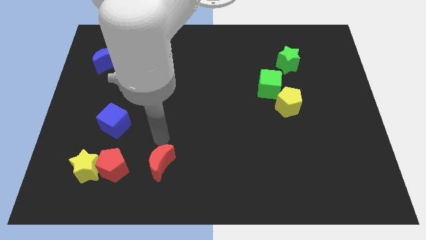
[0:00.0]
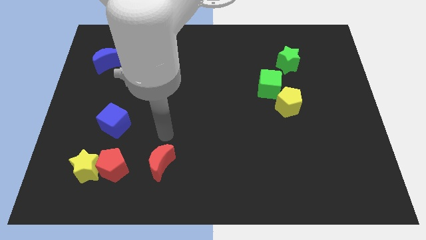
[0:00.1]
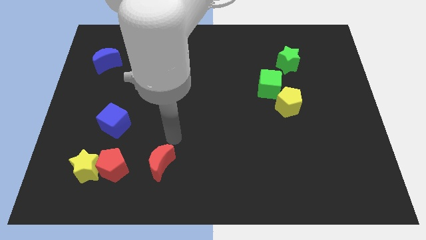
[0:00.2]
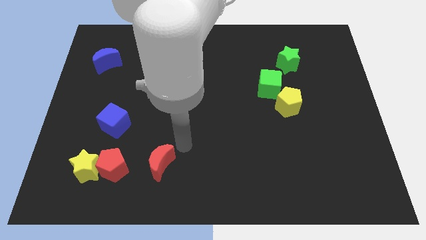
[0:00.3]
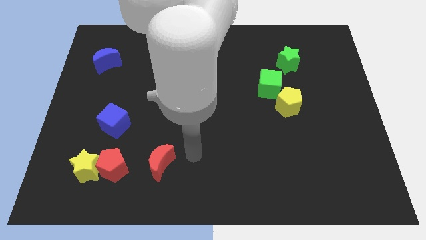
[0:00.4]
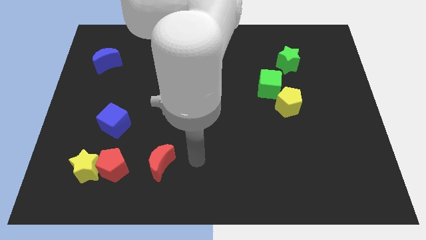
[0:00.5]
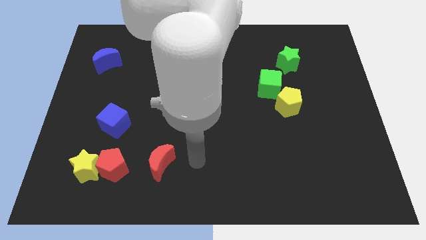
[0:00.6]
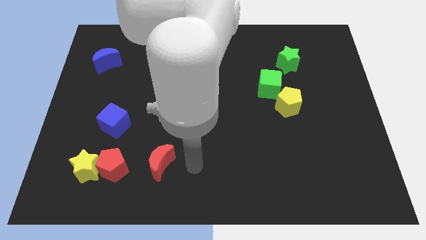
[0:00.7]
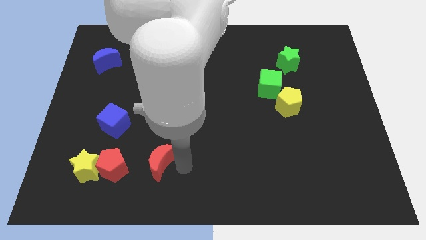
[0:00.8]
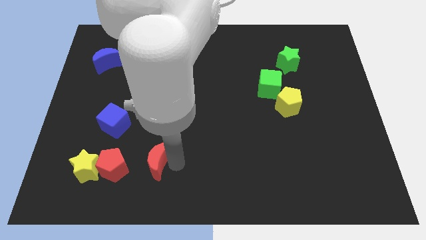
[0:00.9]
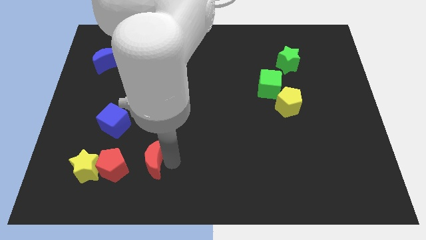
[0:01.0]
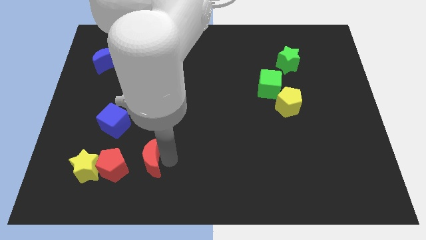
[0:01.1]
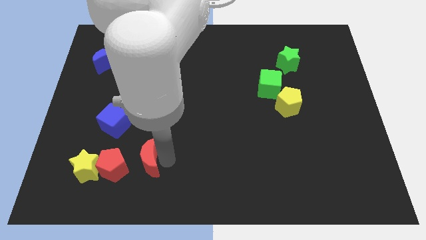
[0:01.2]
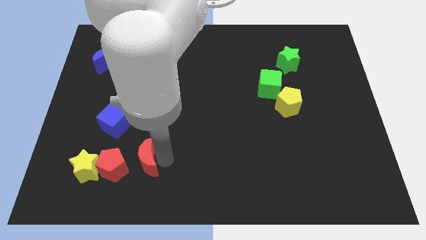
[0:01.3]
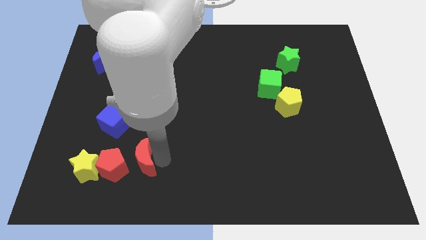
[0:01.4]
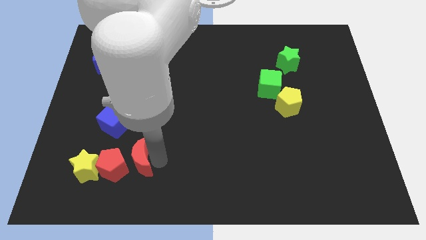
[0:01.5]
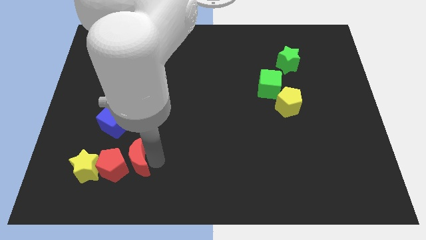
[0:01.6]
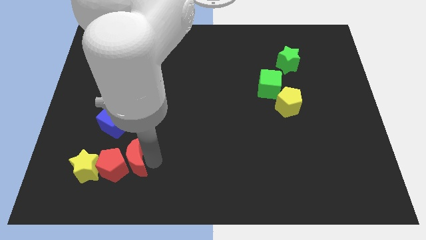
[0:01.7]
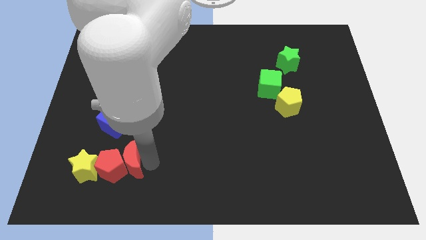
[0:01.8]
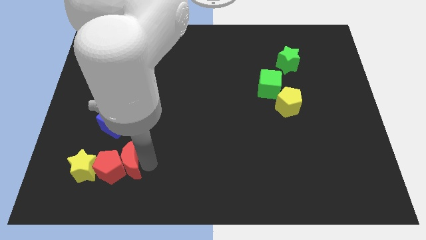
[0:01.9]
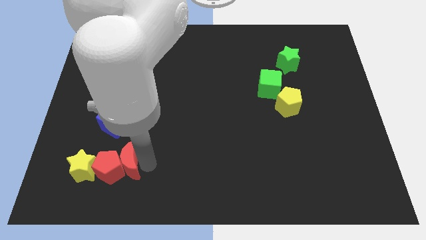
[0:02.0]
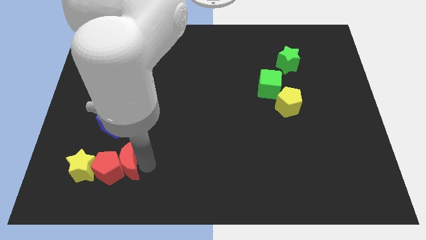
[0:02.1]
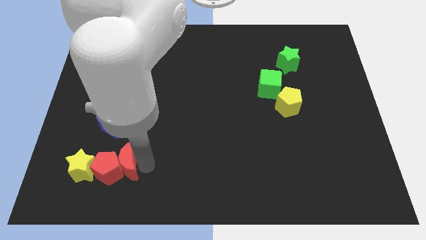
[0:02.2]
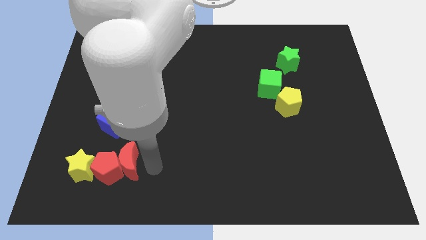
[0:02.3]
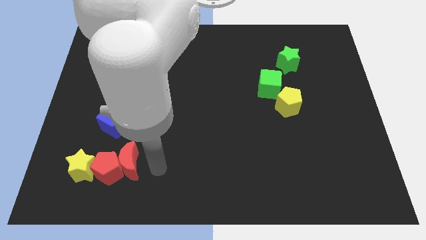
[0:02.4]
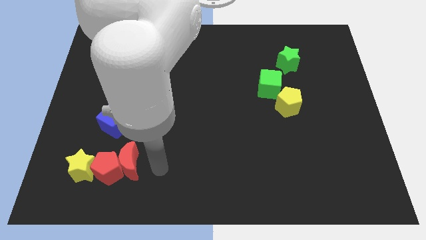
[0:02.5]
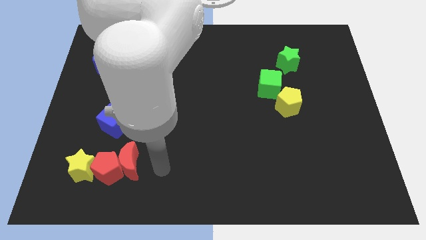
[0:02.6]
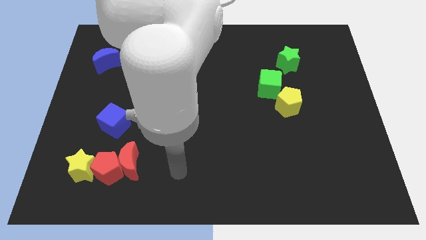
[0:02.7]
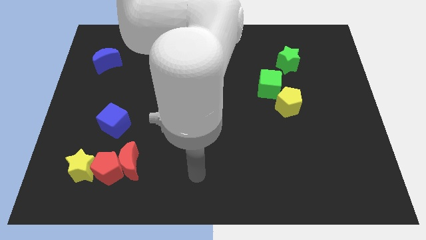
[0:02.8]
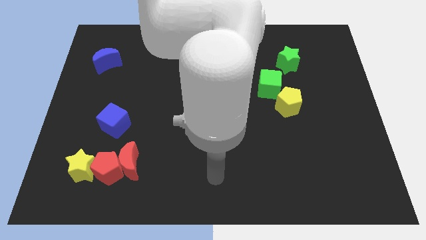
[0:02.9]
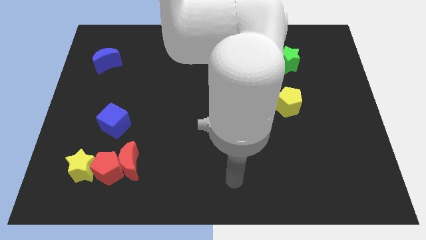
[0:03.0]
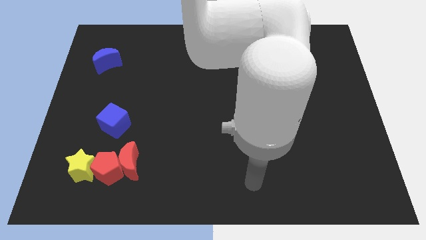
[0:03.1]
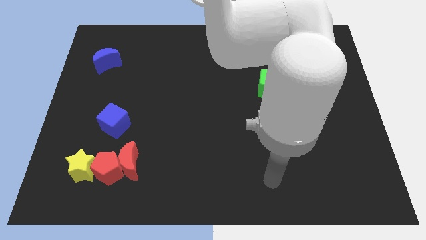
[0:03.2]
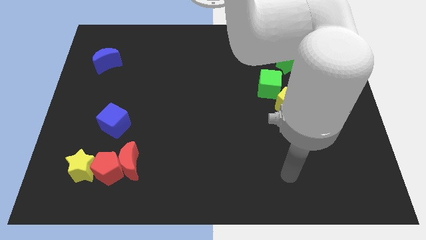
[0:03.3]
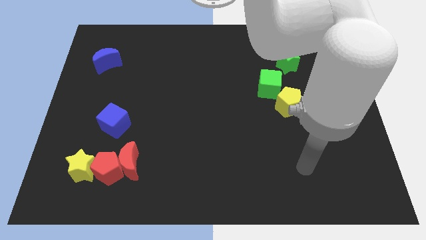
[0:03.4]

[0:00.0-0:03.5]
push the red moon into the red pentagon

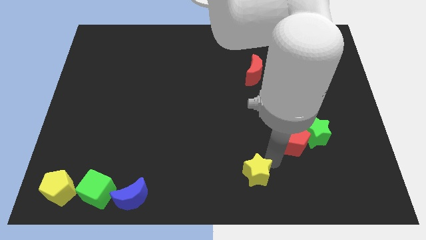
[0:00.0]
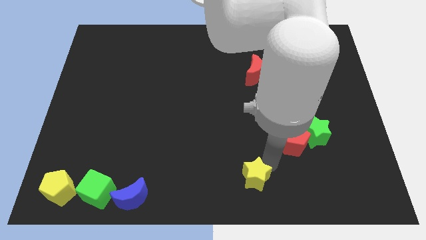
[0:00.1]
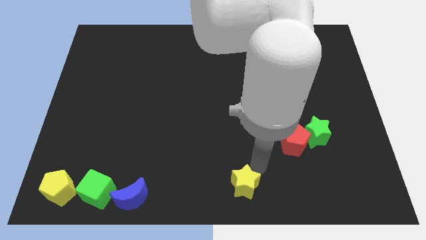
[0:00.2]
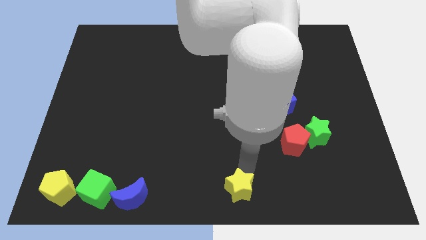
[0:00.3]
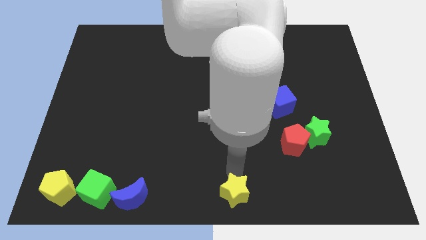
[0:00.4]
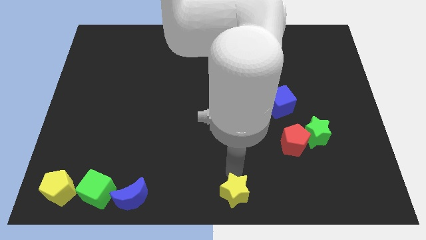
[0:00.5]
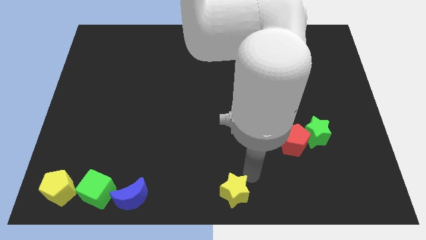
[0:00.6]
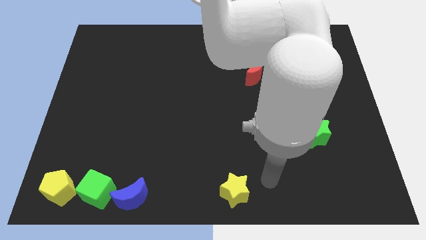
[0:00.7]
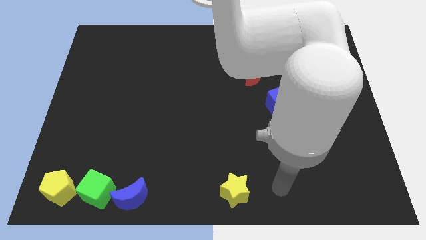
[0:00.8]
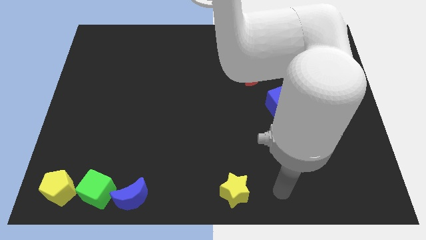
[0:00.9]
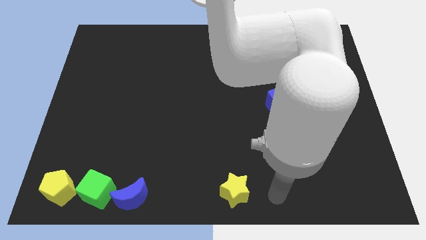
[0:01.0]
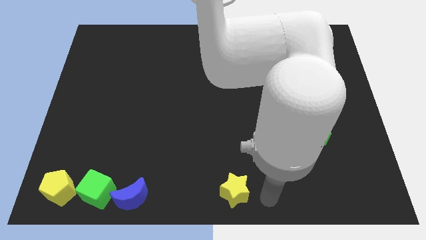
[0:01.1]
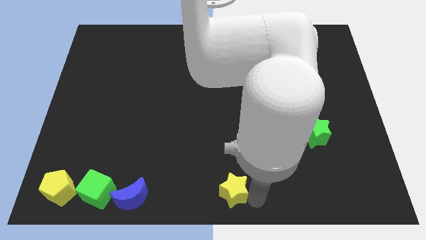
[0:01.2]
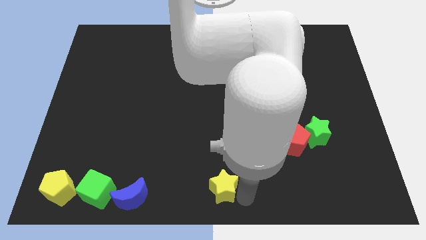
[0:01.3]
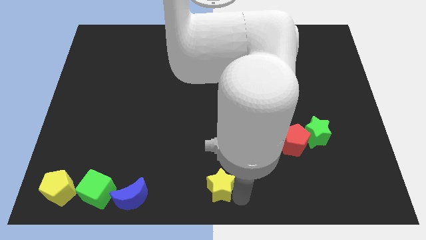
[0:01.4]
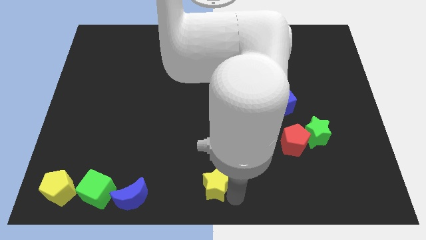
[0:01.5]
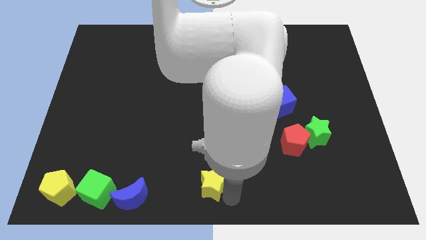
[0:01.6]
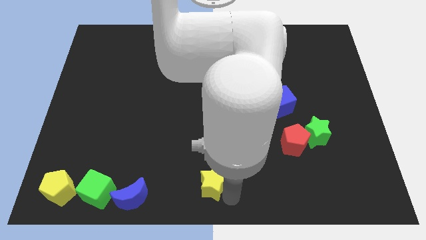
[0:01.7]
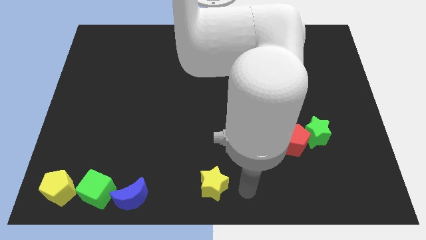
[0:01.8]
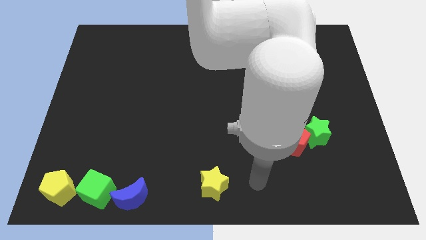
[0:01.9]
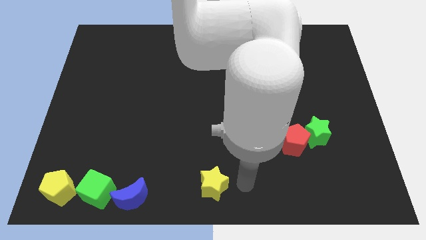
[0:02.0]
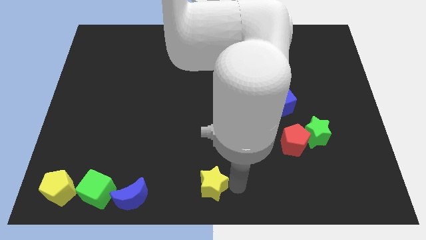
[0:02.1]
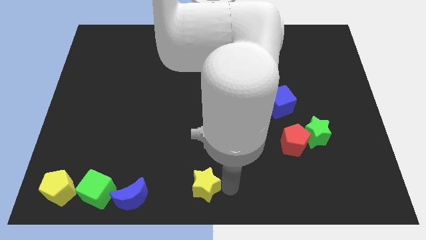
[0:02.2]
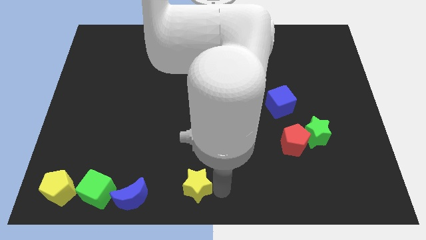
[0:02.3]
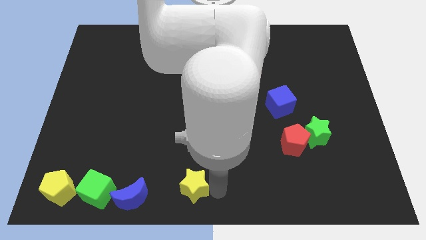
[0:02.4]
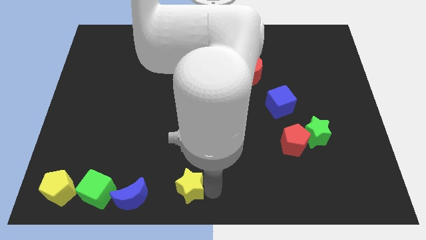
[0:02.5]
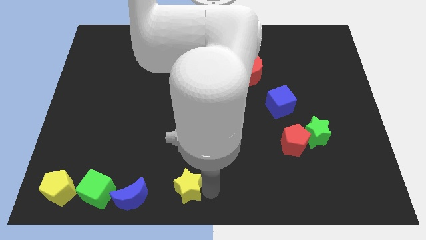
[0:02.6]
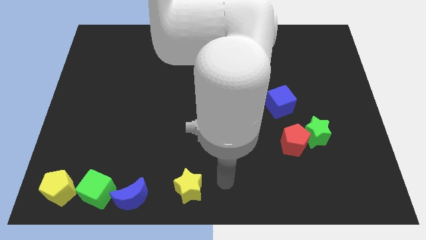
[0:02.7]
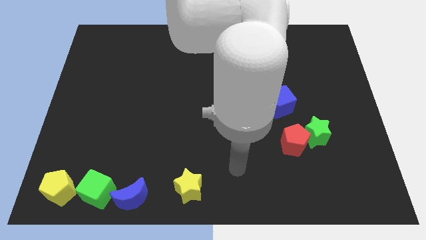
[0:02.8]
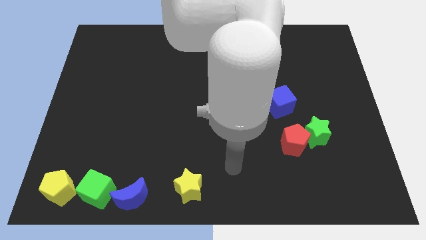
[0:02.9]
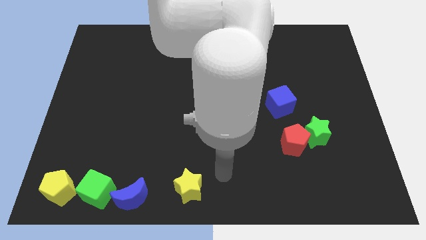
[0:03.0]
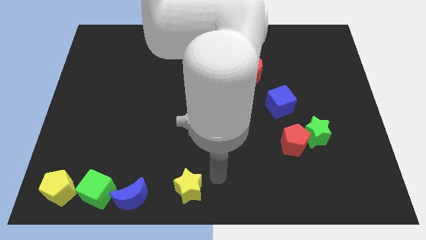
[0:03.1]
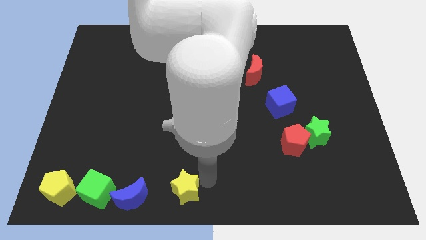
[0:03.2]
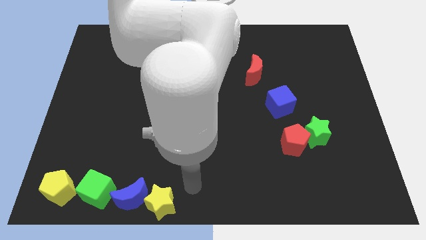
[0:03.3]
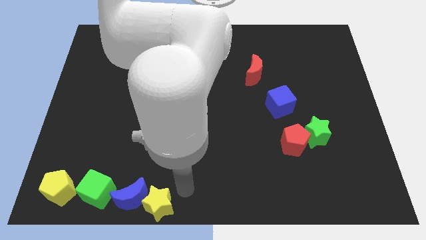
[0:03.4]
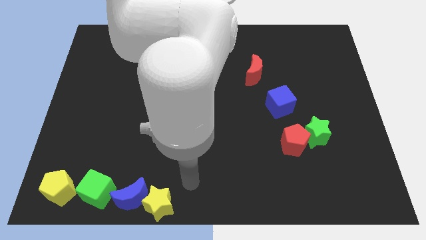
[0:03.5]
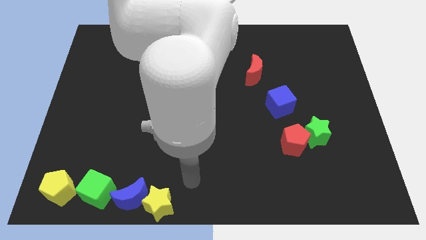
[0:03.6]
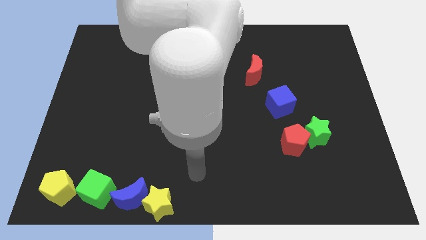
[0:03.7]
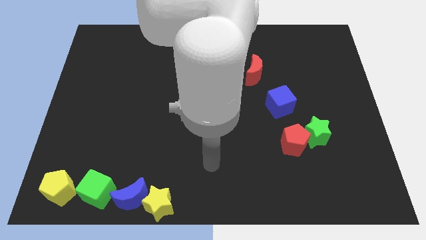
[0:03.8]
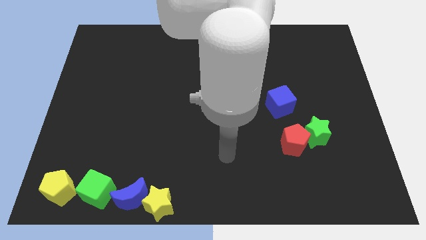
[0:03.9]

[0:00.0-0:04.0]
place the yellow star to the right of the blue moon

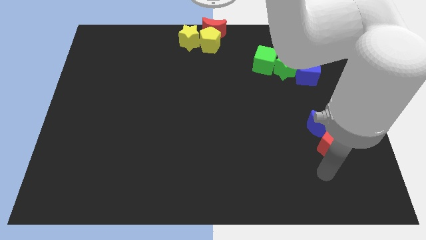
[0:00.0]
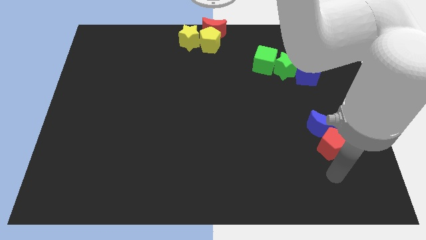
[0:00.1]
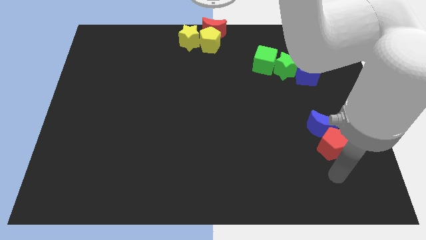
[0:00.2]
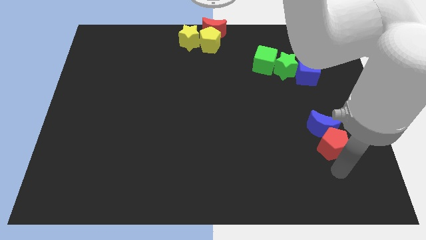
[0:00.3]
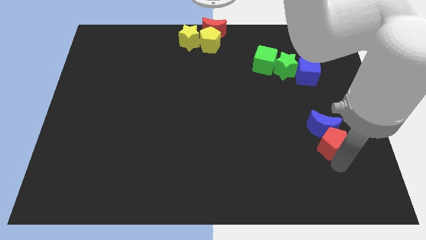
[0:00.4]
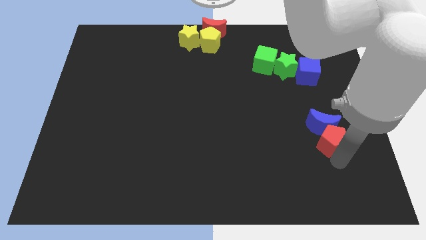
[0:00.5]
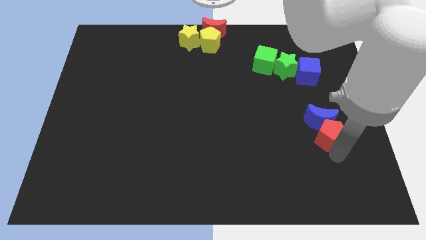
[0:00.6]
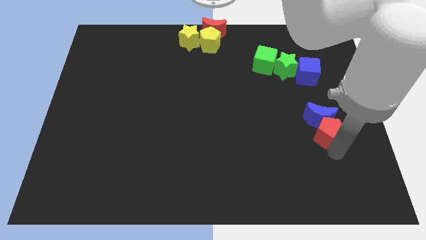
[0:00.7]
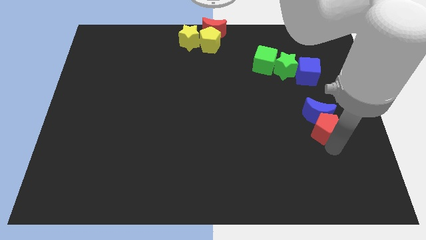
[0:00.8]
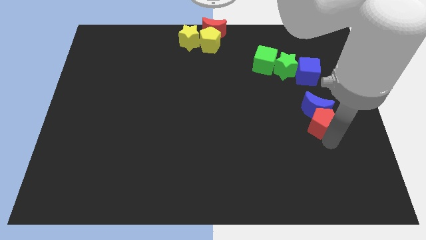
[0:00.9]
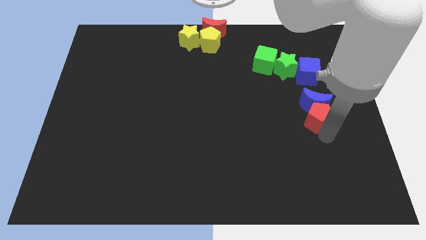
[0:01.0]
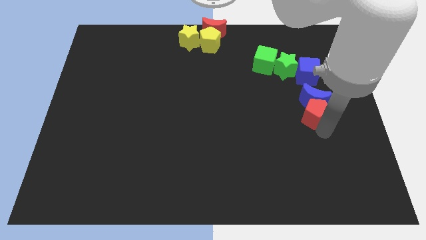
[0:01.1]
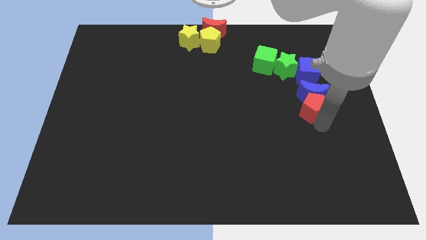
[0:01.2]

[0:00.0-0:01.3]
push the red pentagon along with the blue moon close to the blue cube
